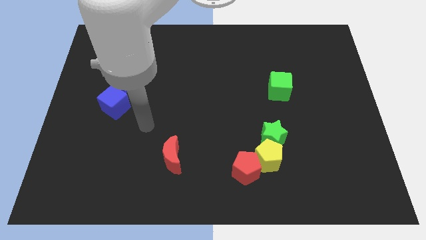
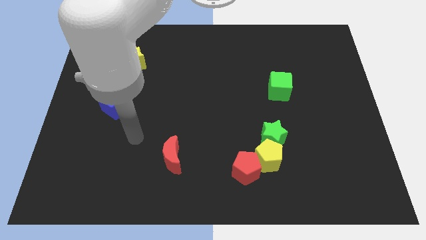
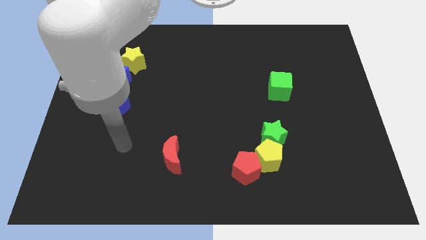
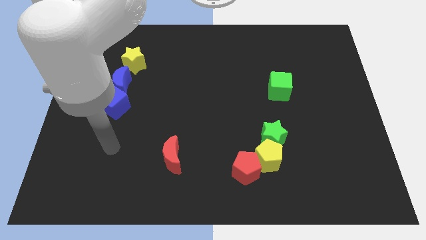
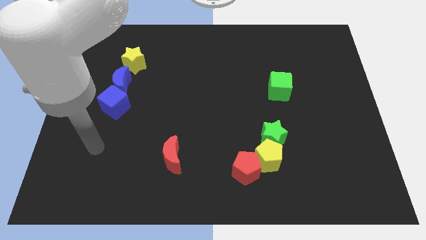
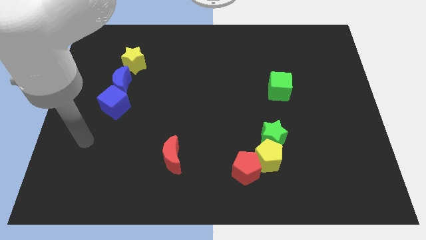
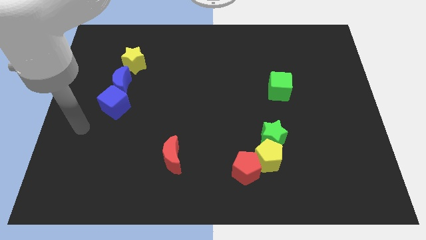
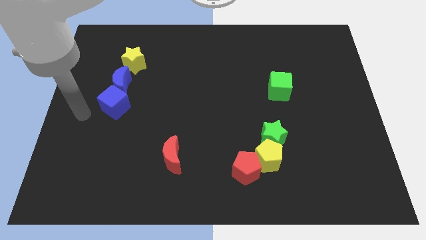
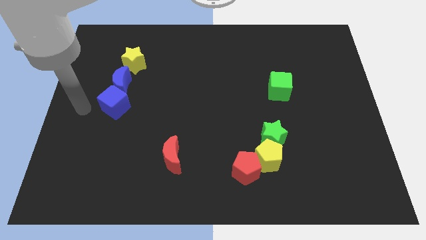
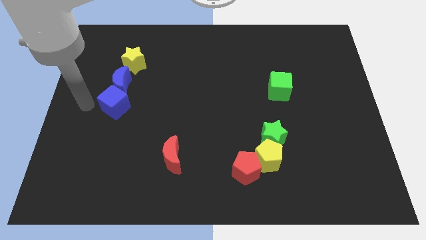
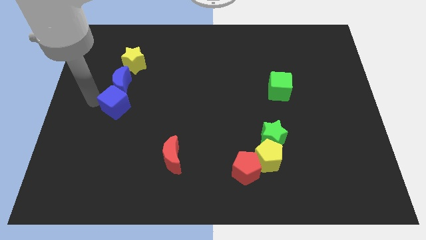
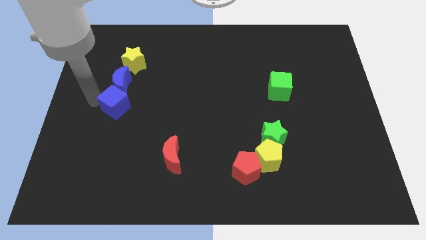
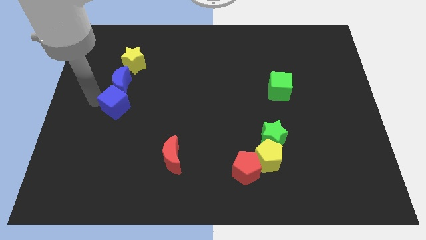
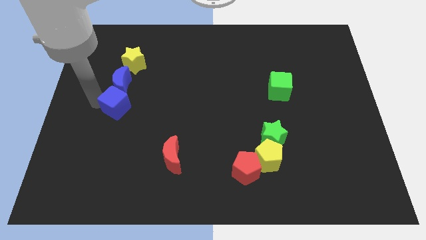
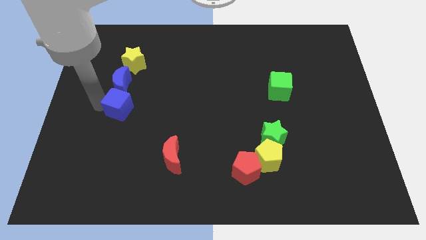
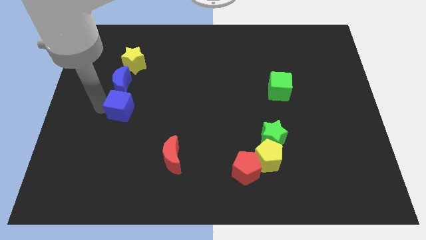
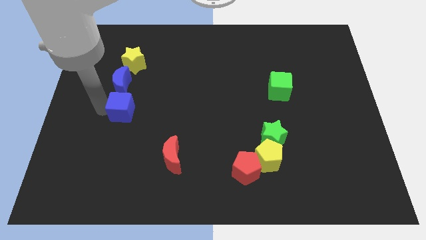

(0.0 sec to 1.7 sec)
push the blue cube slightly to the right

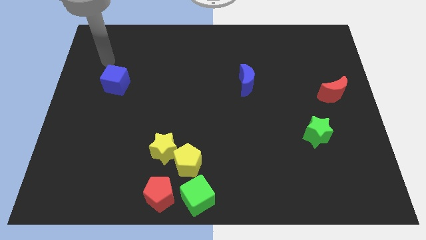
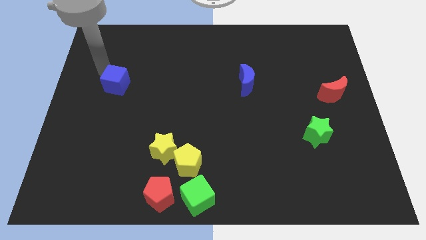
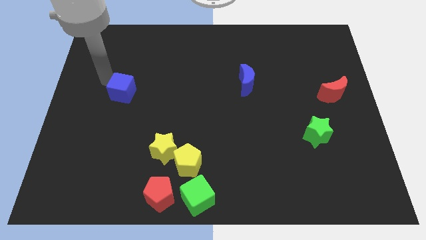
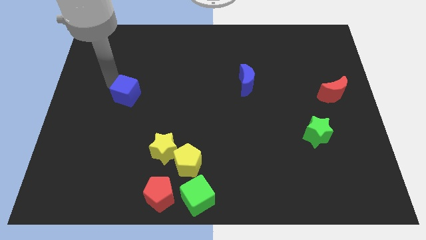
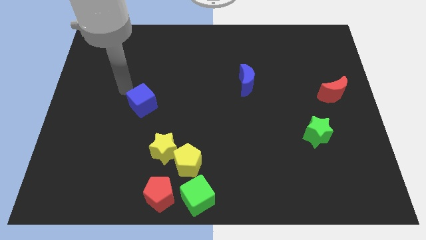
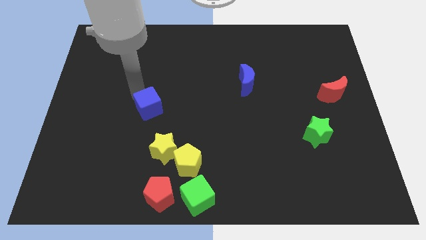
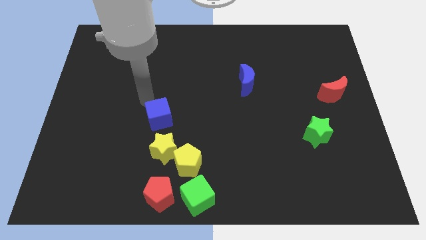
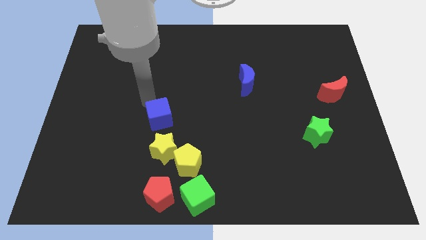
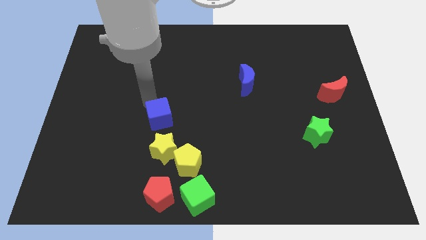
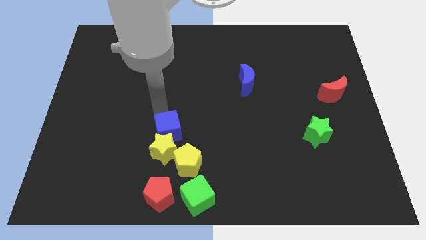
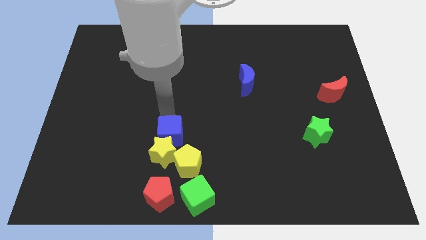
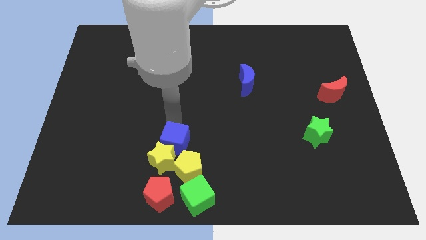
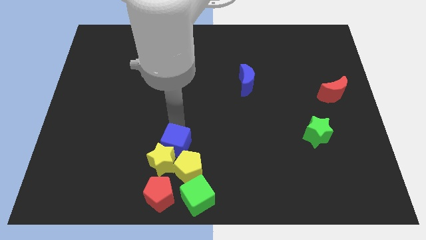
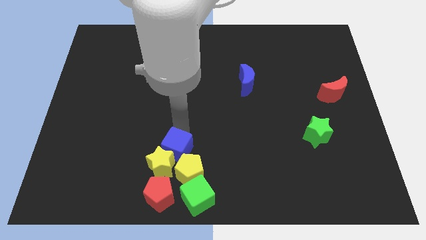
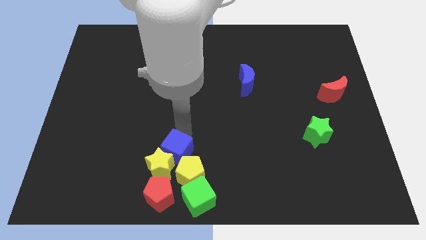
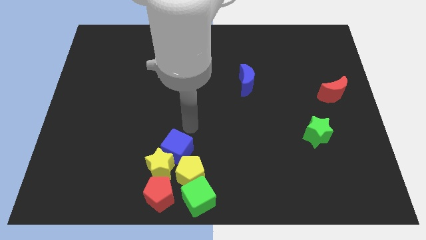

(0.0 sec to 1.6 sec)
push blue cube into the yellow blocks

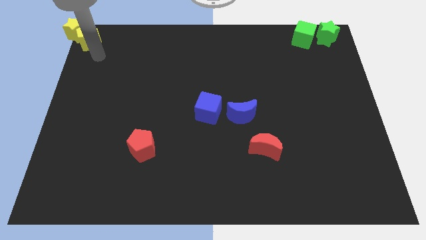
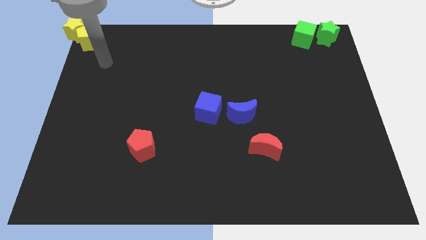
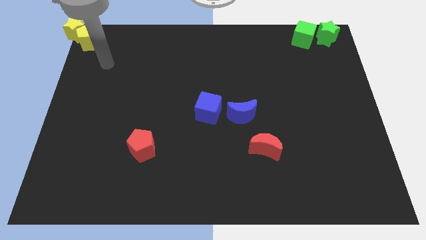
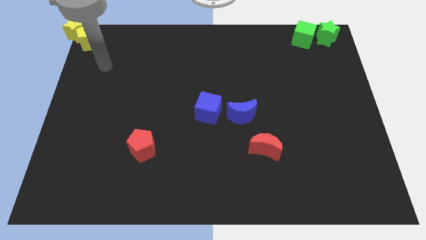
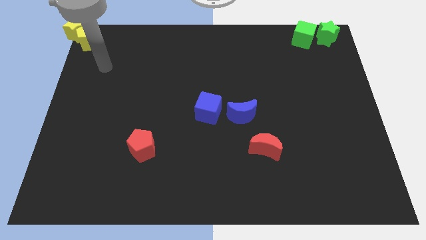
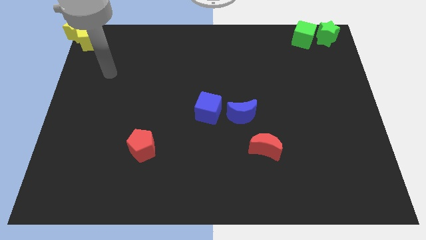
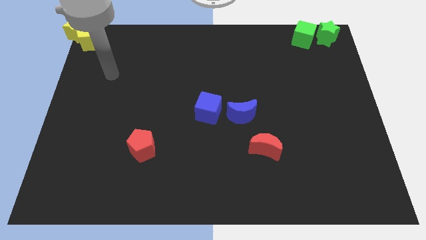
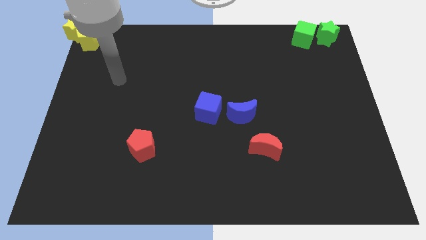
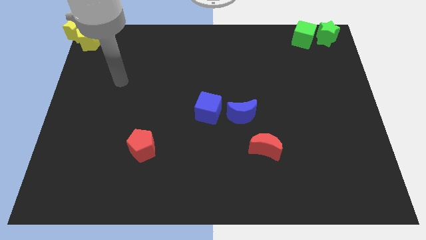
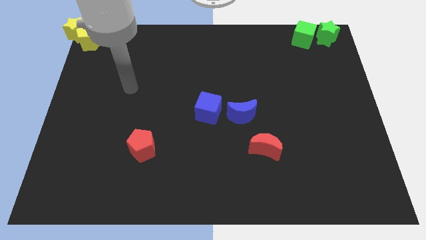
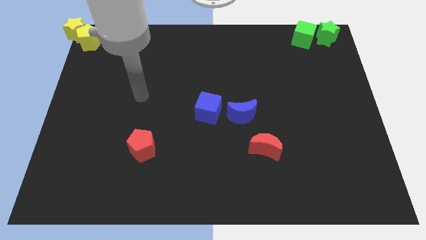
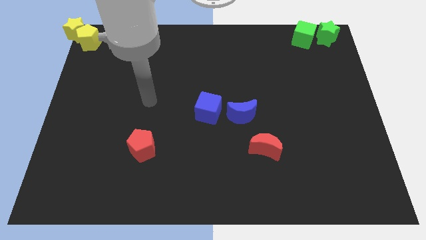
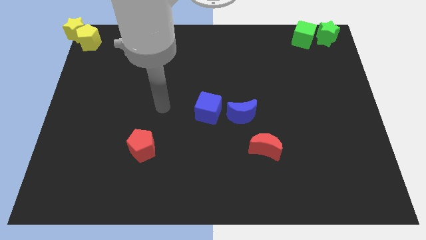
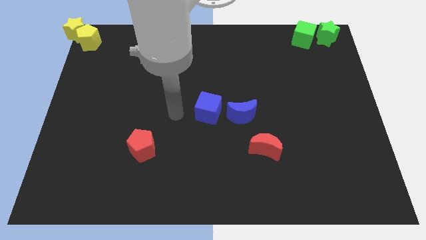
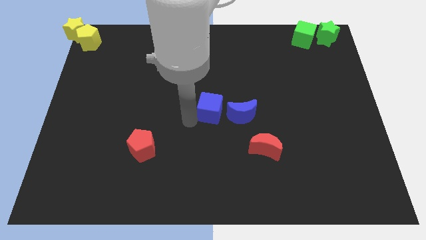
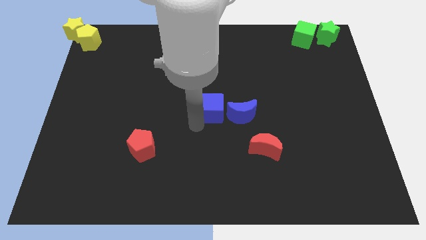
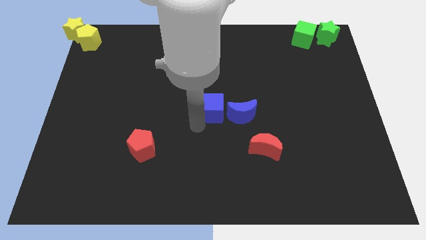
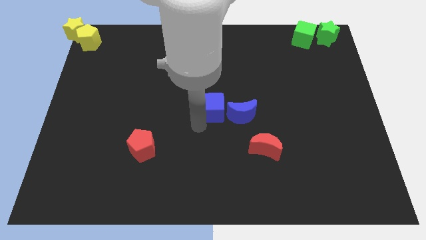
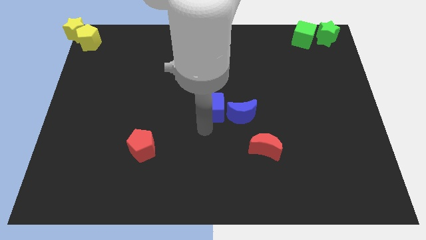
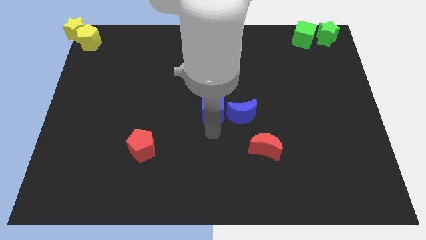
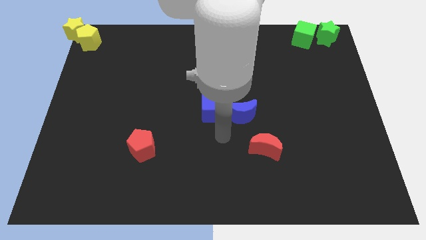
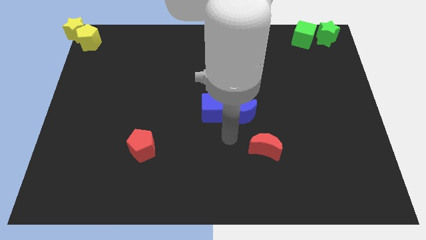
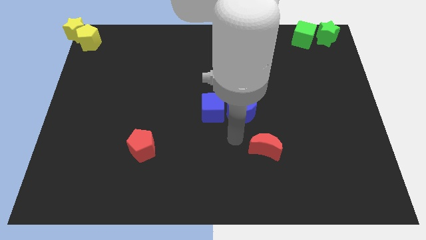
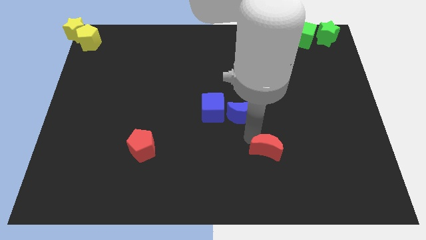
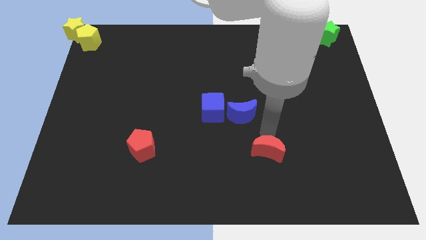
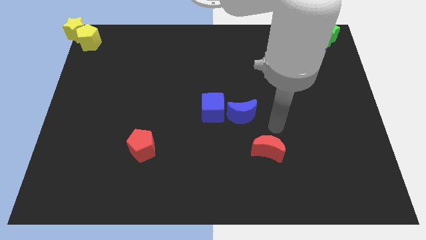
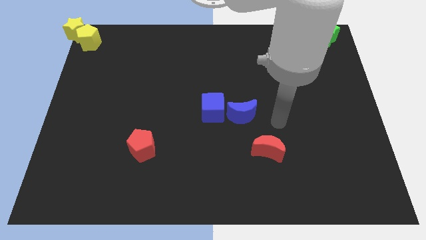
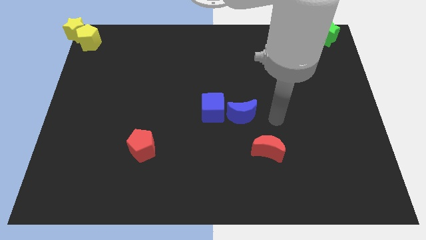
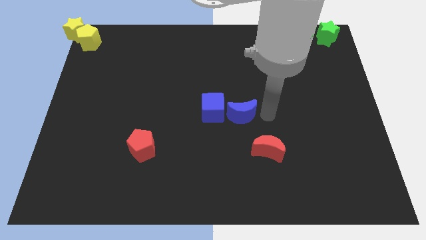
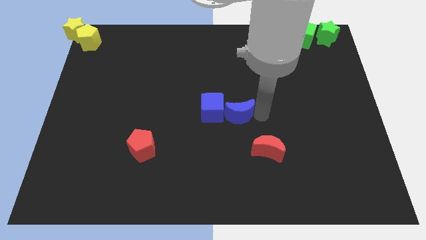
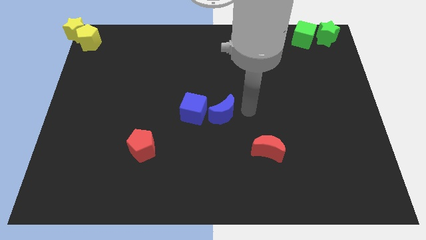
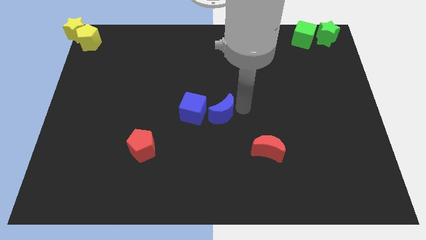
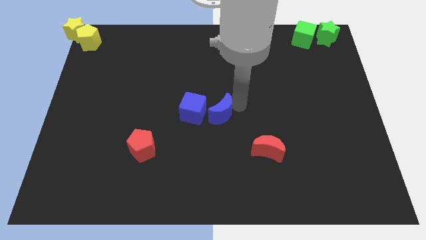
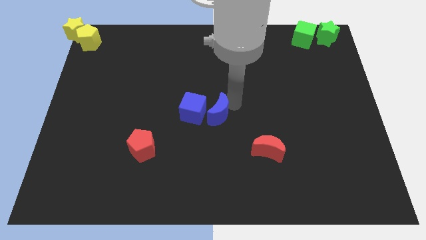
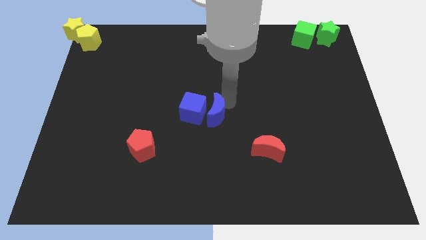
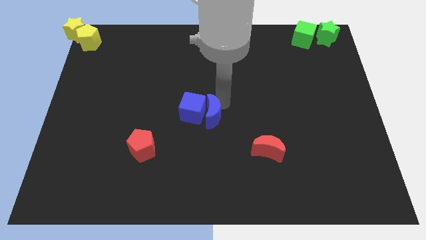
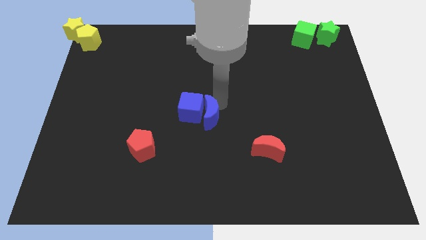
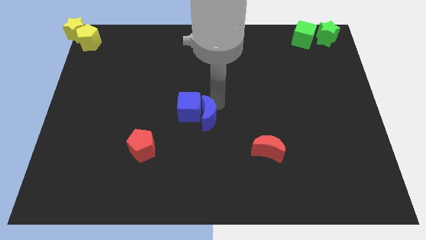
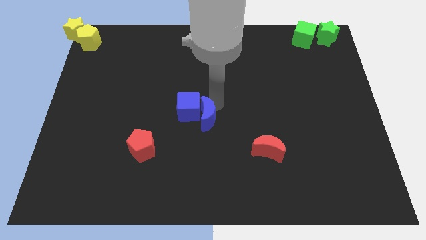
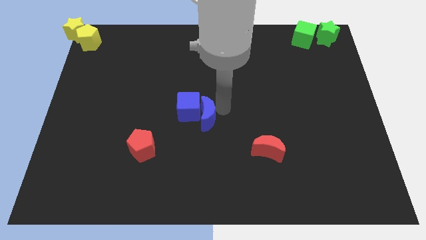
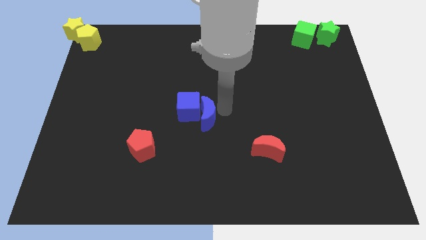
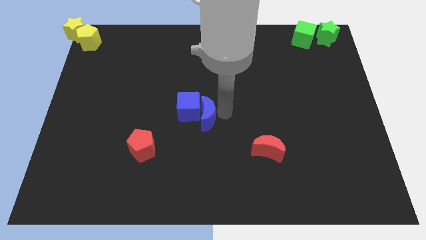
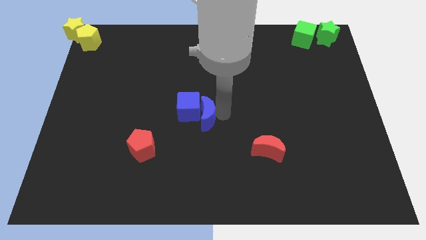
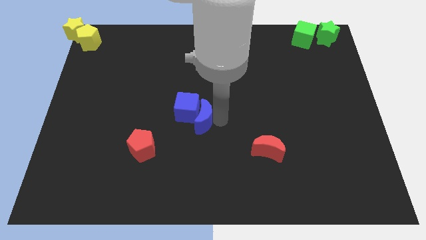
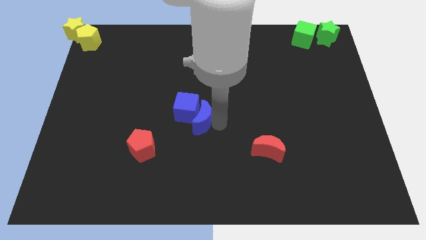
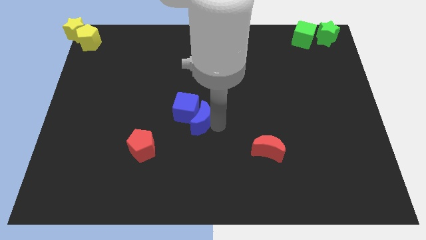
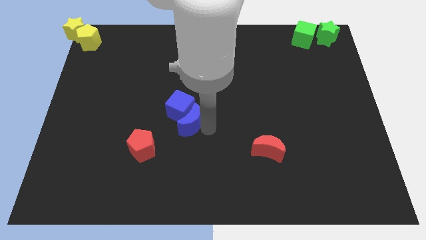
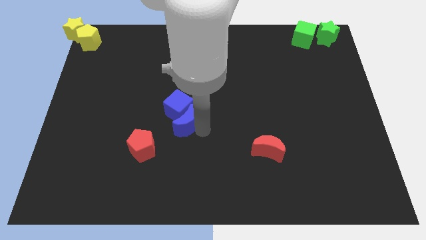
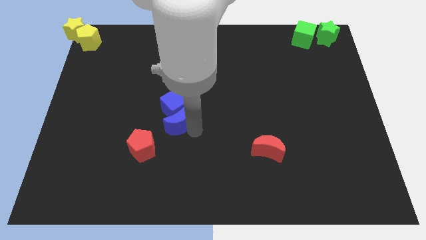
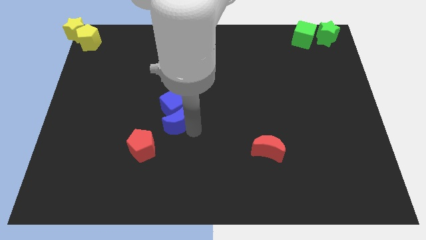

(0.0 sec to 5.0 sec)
move blue moon into the blue cube

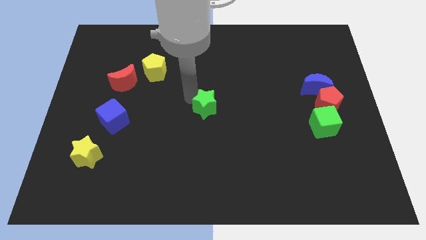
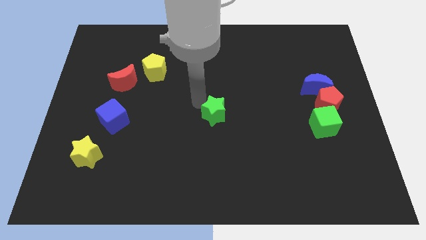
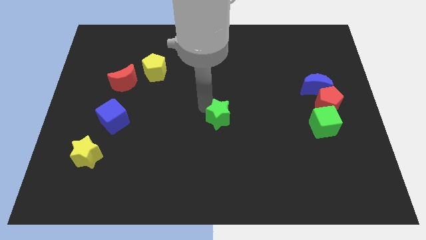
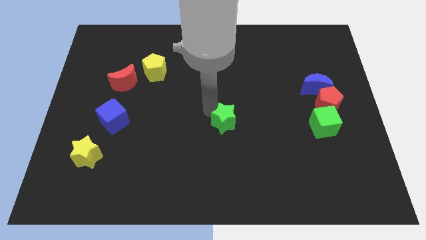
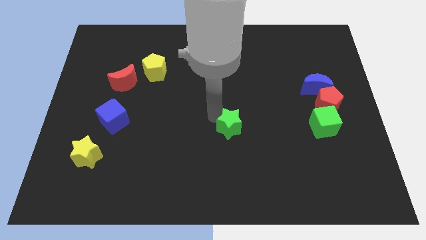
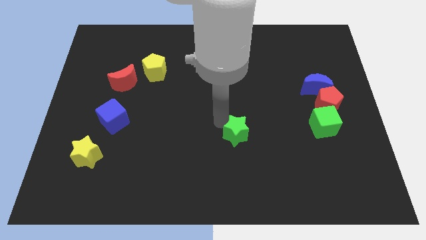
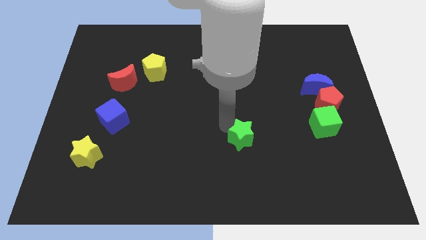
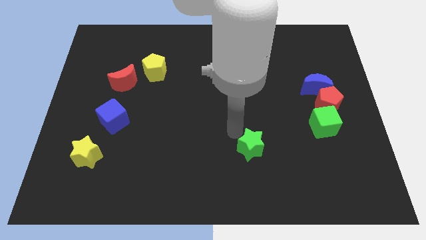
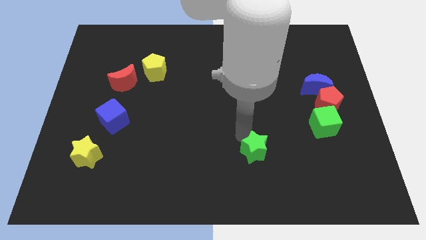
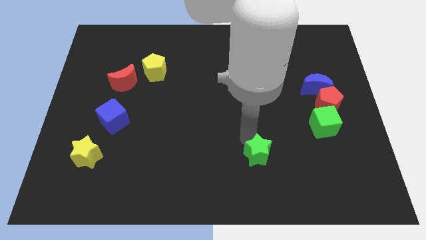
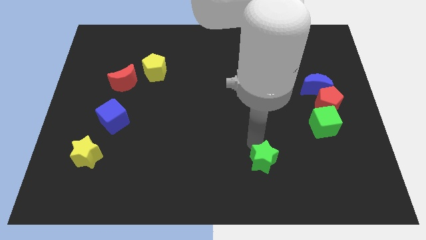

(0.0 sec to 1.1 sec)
move green star towards bottom center
